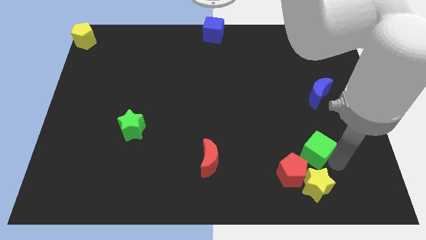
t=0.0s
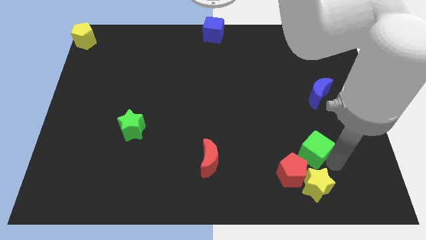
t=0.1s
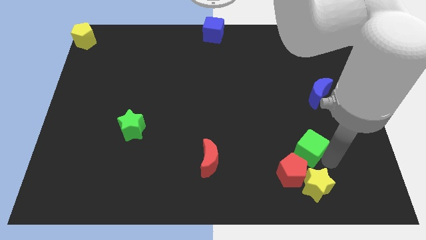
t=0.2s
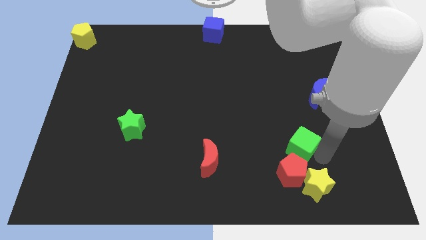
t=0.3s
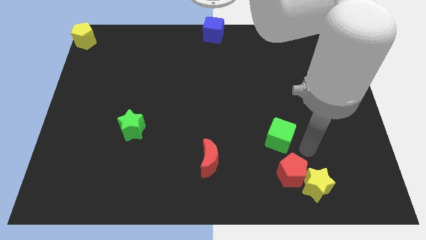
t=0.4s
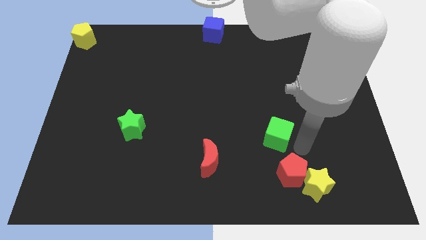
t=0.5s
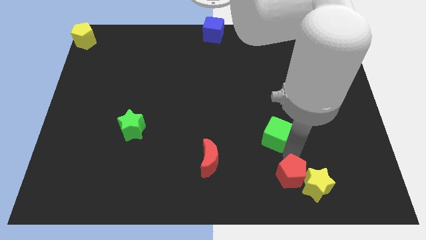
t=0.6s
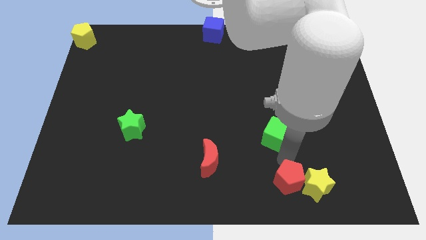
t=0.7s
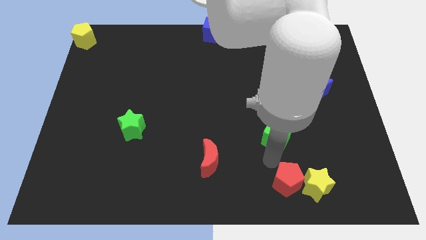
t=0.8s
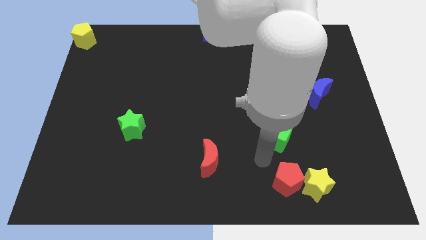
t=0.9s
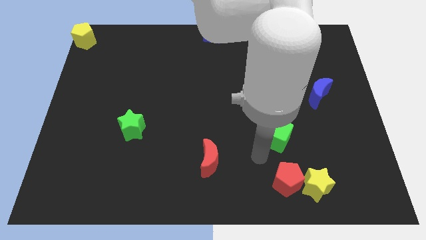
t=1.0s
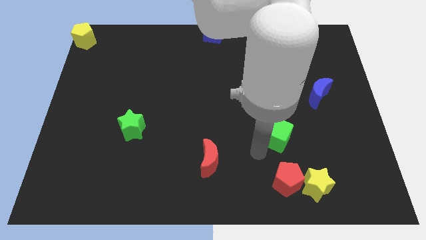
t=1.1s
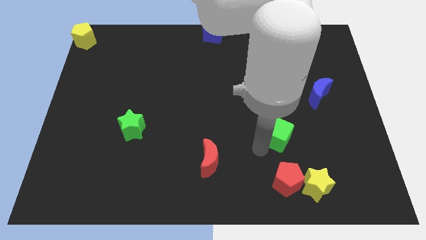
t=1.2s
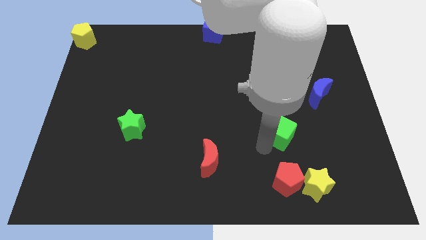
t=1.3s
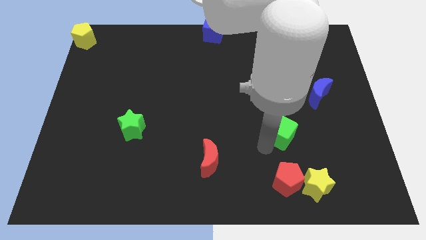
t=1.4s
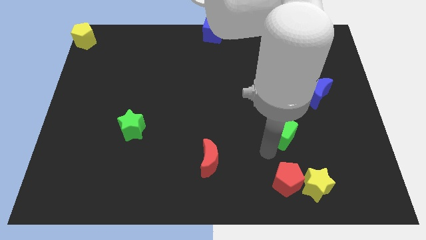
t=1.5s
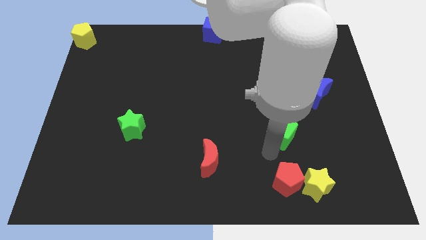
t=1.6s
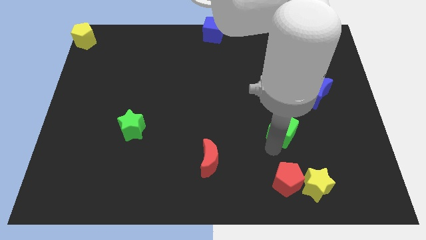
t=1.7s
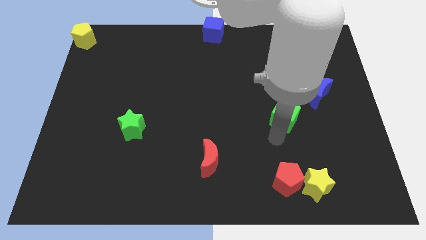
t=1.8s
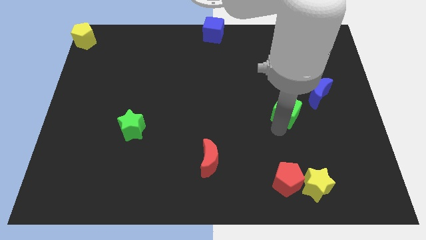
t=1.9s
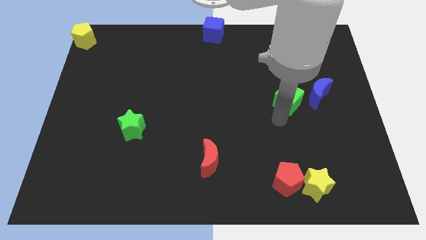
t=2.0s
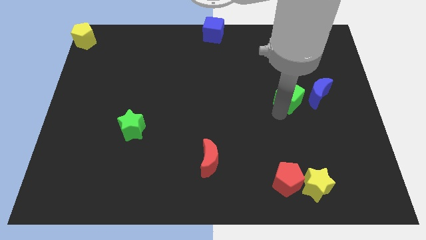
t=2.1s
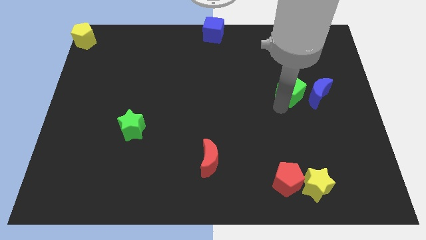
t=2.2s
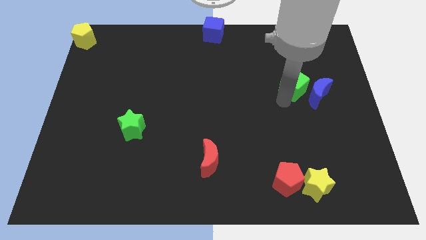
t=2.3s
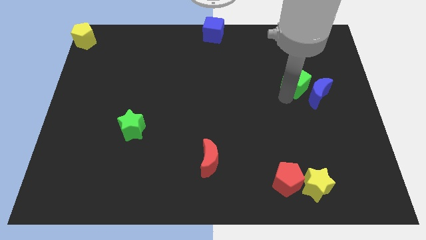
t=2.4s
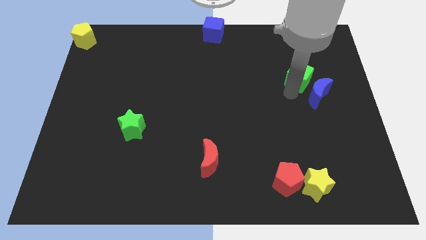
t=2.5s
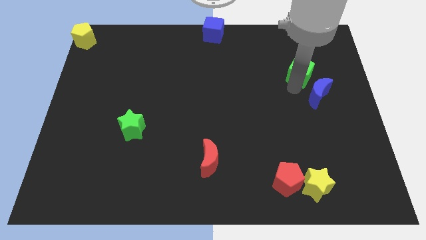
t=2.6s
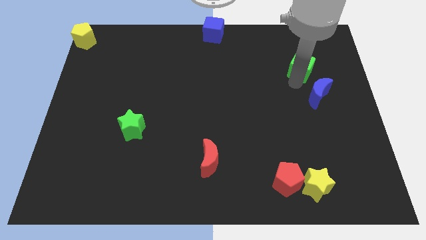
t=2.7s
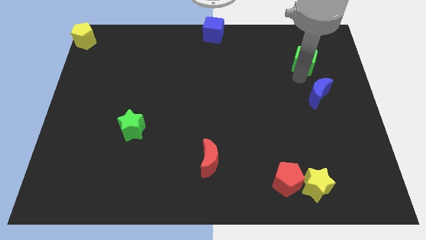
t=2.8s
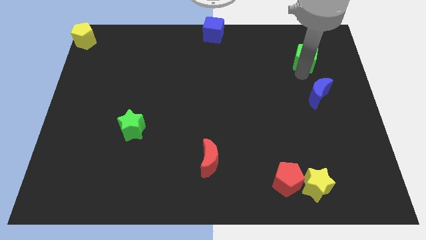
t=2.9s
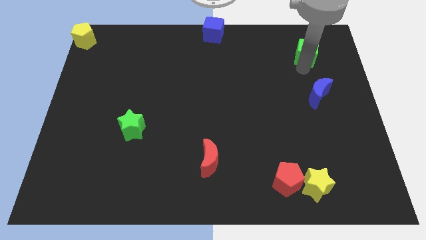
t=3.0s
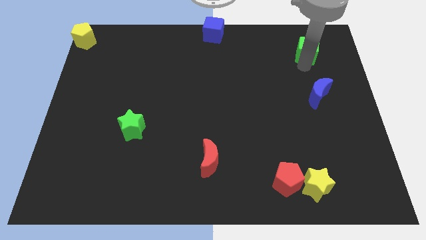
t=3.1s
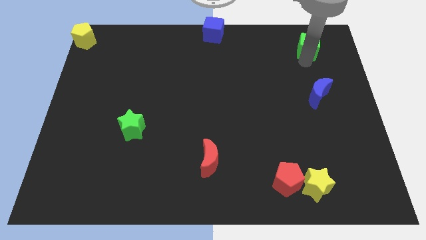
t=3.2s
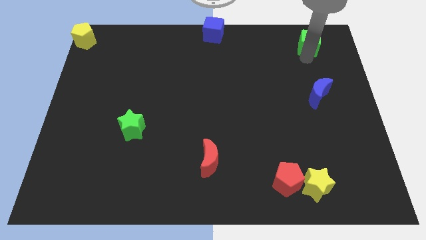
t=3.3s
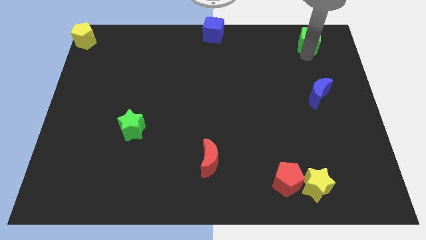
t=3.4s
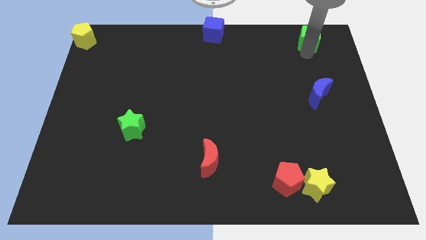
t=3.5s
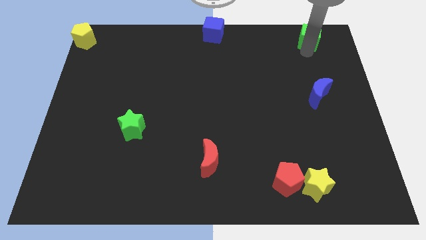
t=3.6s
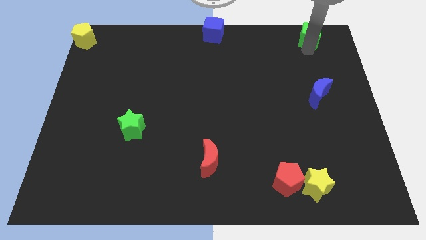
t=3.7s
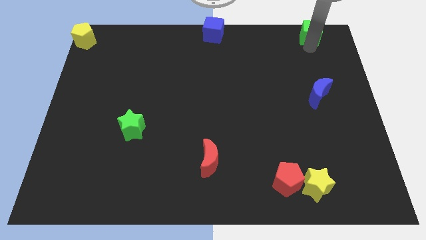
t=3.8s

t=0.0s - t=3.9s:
place the green cube vertically at the top side of the blue crescent

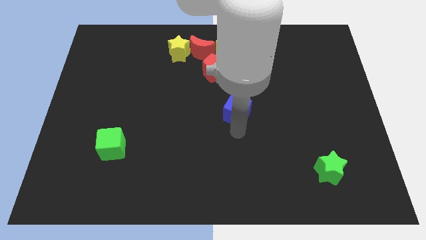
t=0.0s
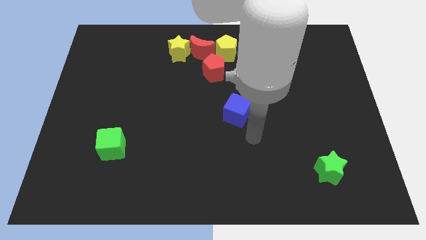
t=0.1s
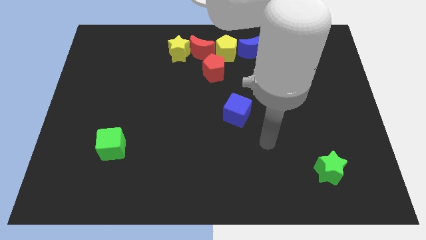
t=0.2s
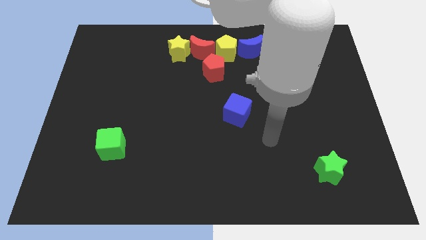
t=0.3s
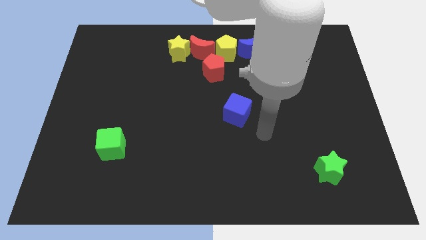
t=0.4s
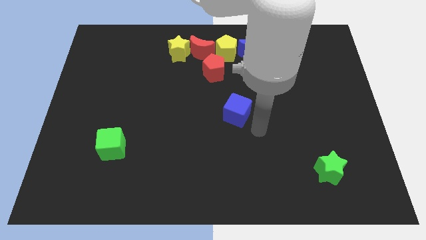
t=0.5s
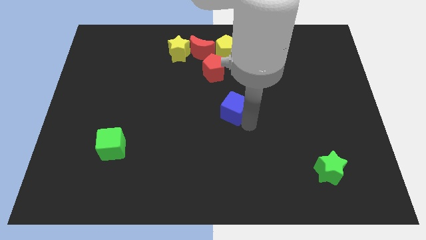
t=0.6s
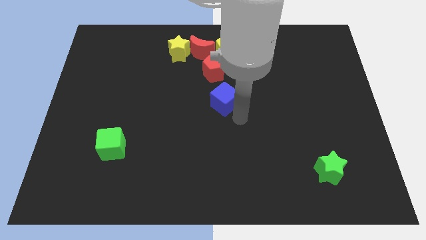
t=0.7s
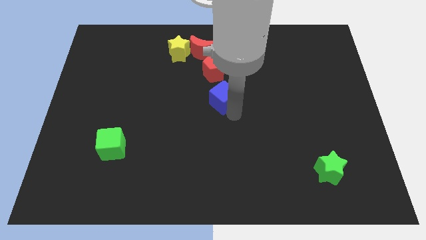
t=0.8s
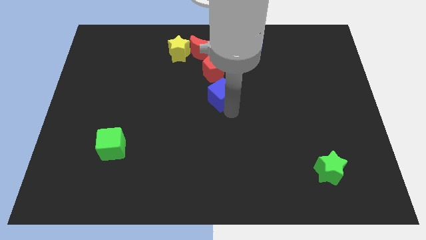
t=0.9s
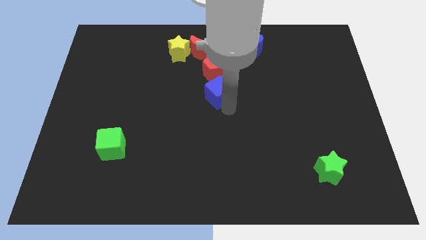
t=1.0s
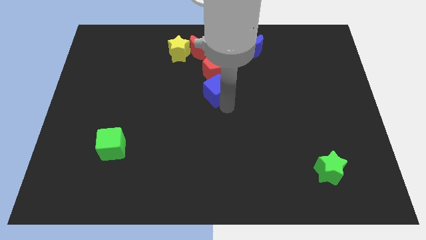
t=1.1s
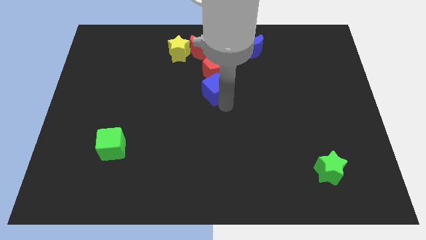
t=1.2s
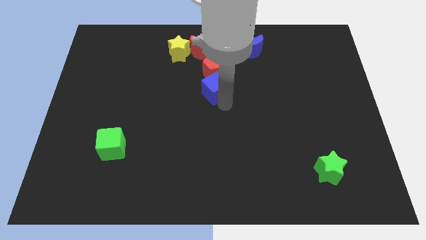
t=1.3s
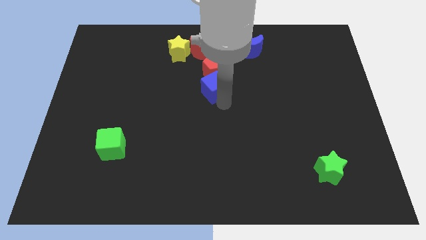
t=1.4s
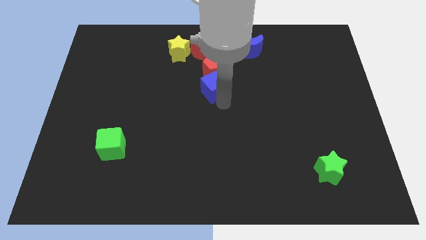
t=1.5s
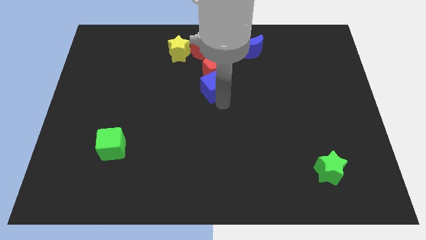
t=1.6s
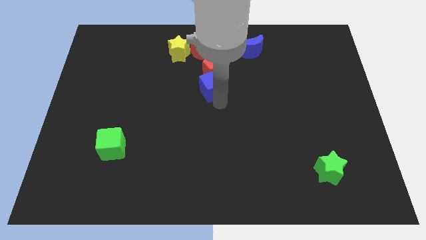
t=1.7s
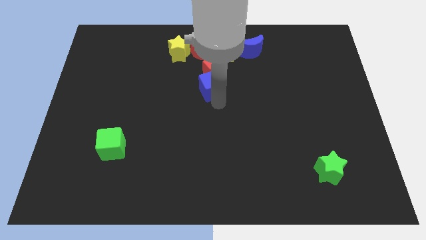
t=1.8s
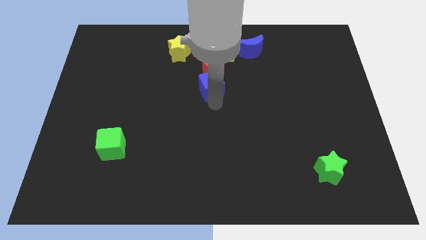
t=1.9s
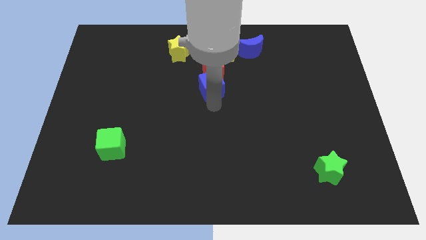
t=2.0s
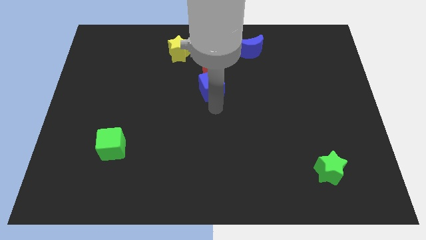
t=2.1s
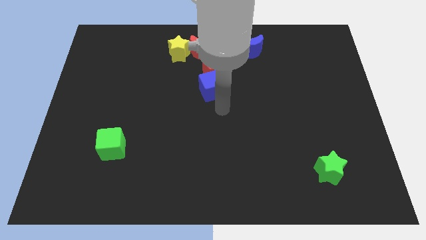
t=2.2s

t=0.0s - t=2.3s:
add the blue cube below red pentagon

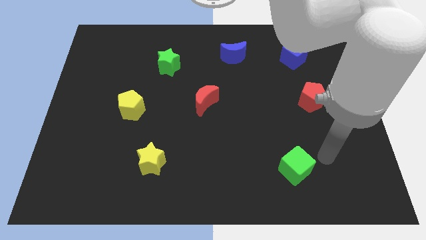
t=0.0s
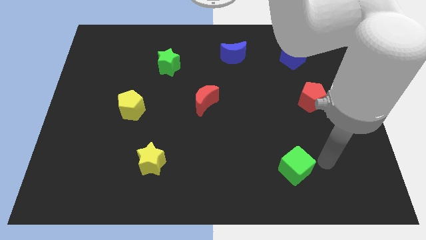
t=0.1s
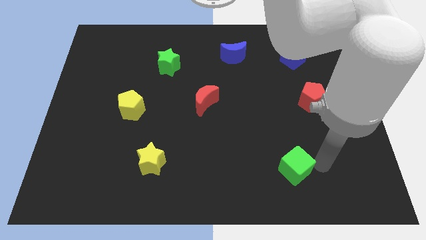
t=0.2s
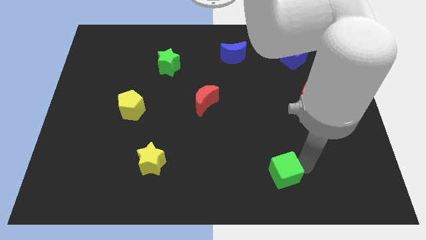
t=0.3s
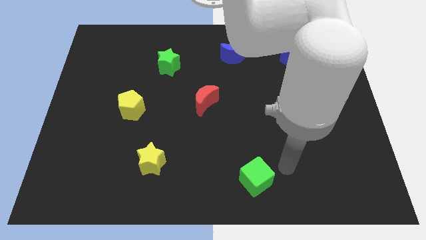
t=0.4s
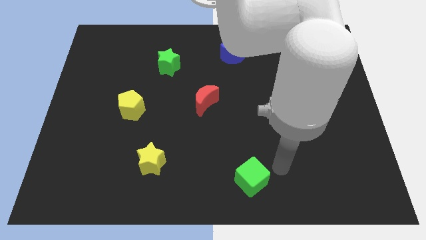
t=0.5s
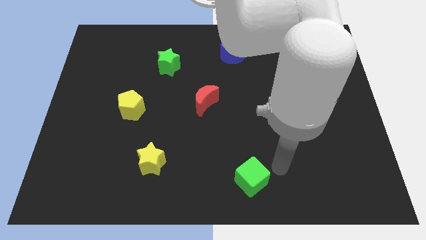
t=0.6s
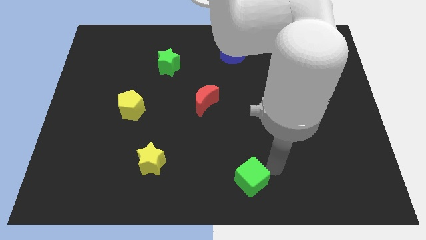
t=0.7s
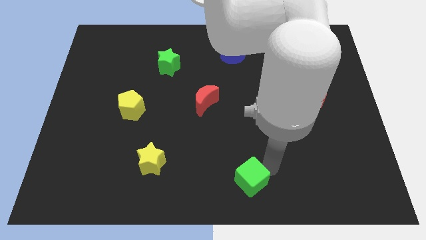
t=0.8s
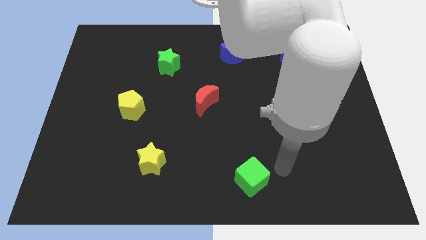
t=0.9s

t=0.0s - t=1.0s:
push green cube vertically below blue crescent

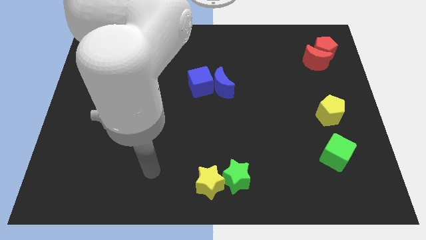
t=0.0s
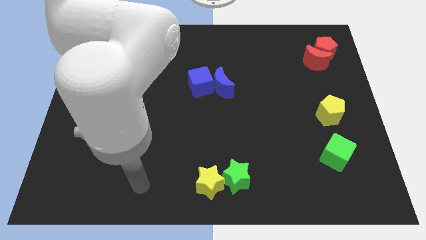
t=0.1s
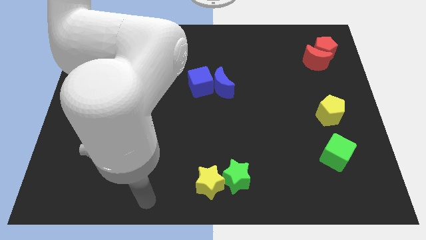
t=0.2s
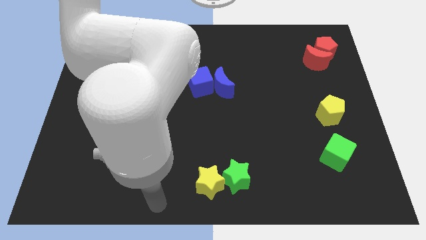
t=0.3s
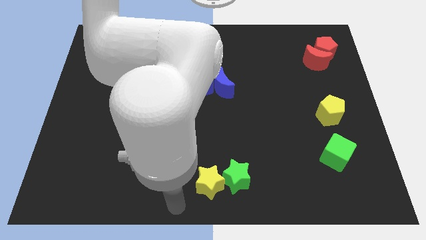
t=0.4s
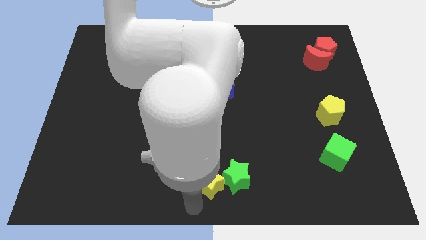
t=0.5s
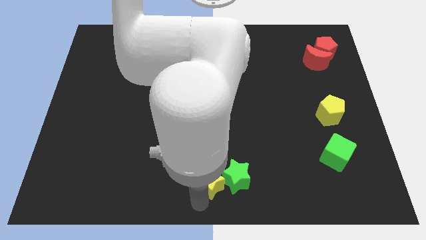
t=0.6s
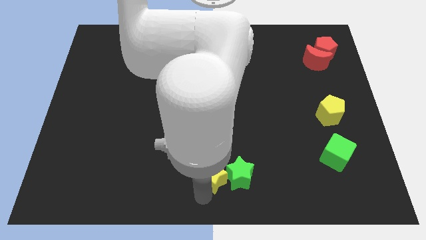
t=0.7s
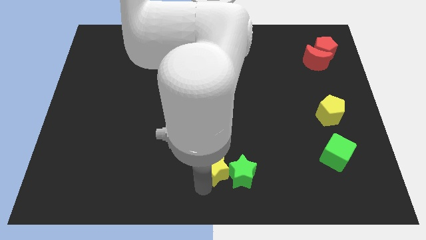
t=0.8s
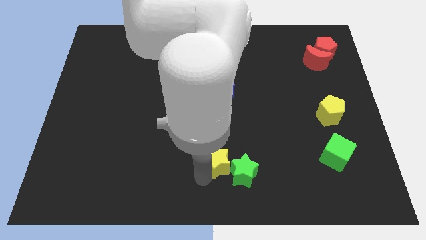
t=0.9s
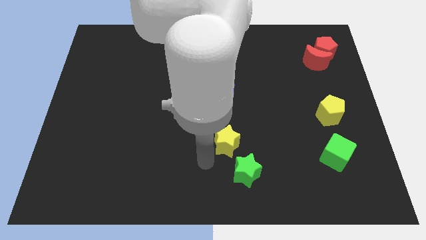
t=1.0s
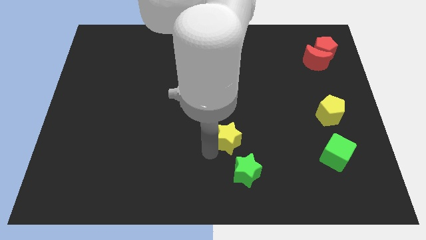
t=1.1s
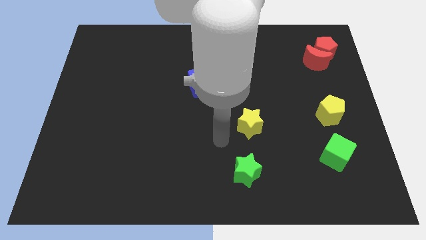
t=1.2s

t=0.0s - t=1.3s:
push the yellow star above the green star

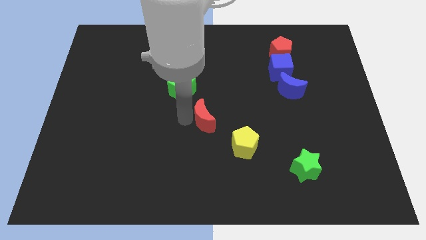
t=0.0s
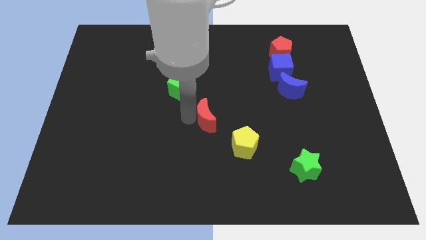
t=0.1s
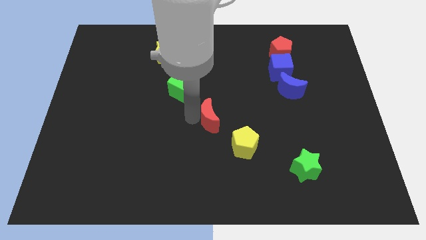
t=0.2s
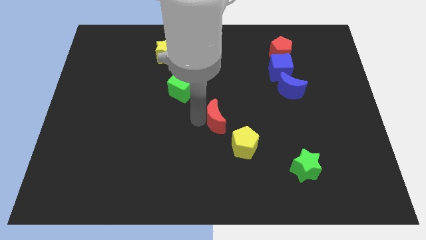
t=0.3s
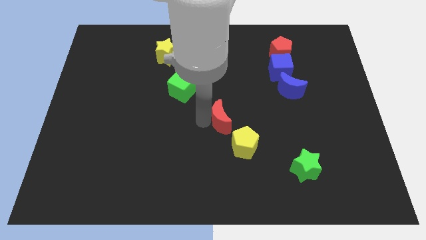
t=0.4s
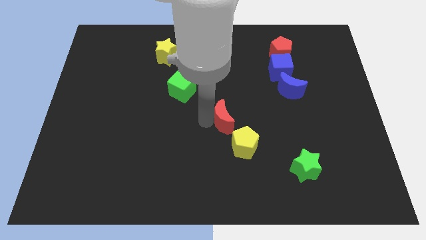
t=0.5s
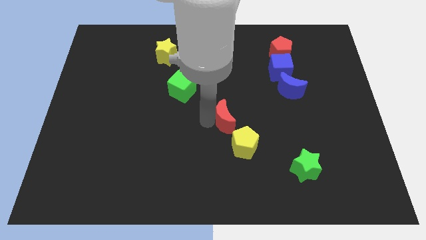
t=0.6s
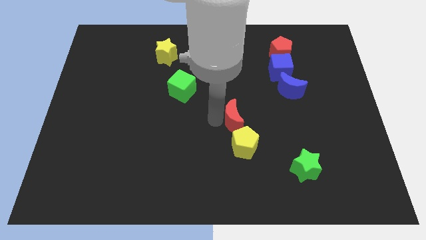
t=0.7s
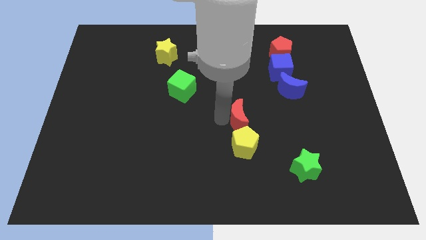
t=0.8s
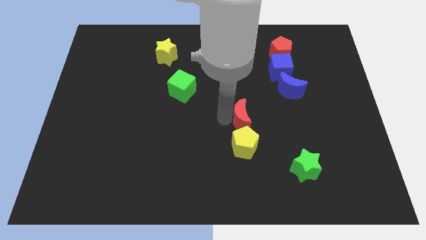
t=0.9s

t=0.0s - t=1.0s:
place the red crescent above the yellow pentagon
